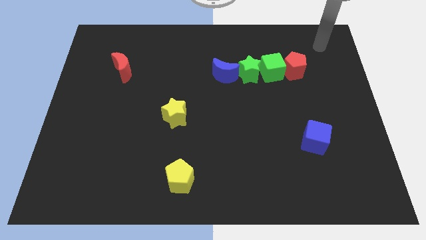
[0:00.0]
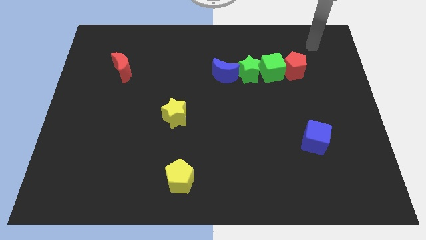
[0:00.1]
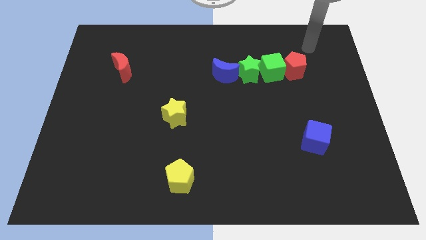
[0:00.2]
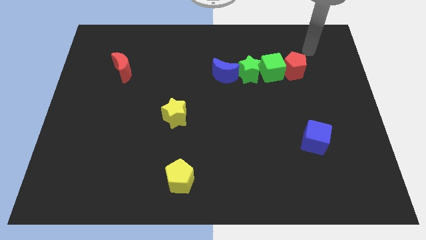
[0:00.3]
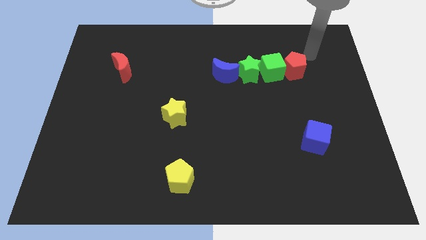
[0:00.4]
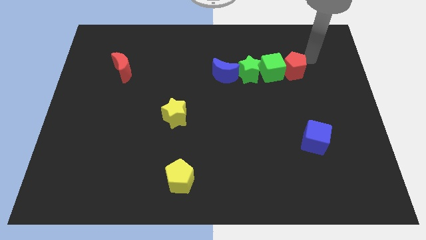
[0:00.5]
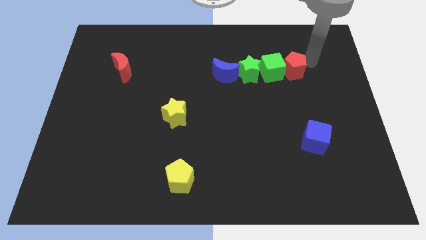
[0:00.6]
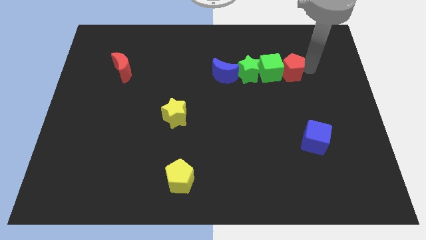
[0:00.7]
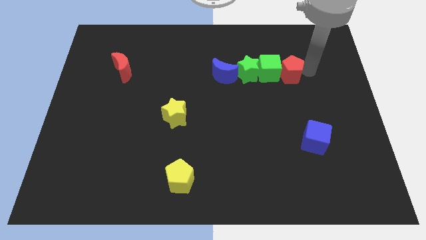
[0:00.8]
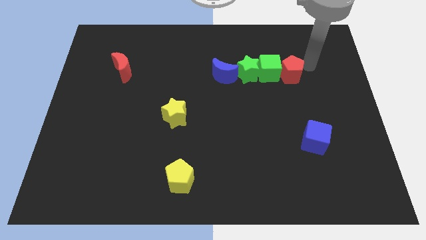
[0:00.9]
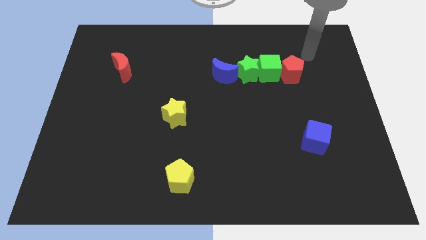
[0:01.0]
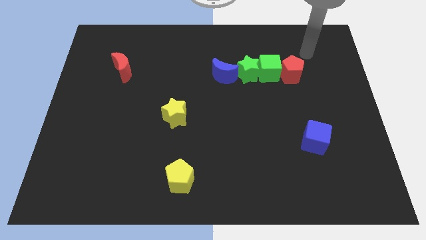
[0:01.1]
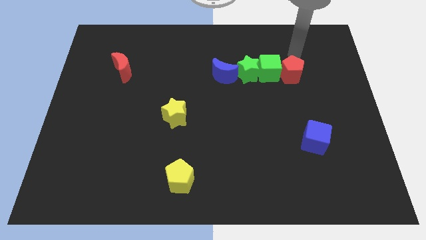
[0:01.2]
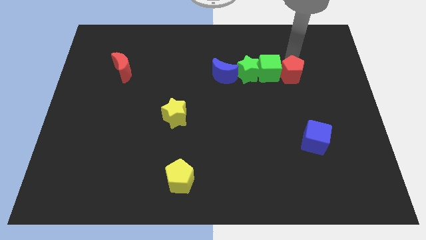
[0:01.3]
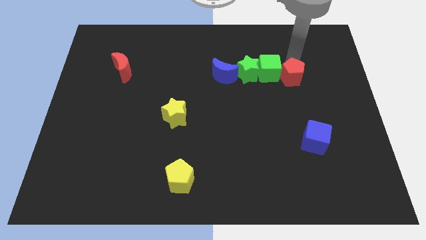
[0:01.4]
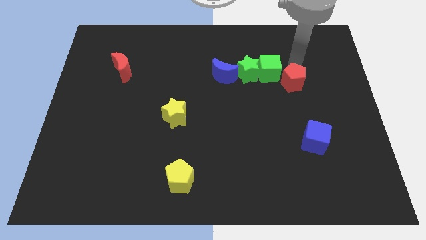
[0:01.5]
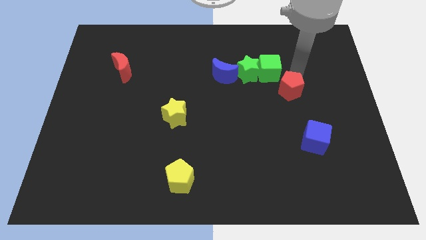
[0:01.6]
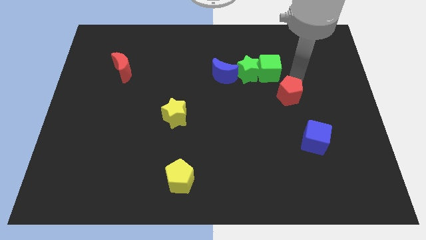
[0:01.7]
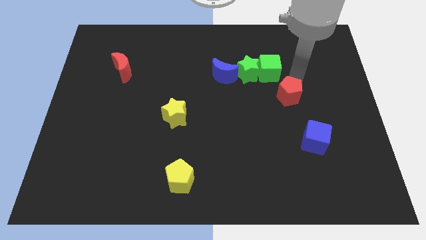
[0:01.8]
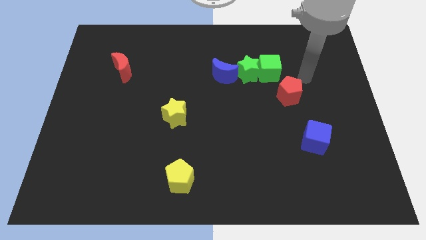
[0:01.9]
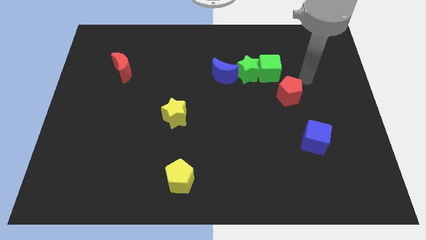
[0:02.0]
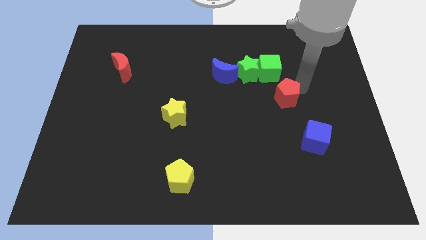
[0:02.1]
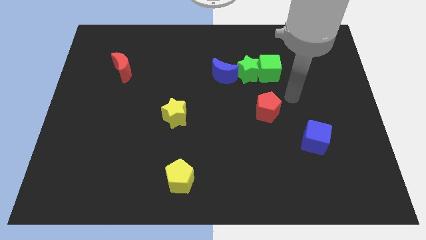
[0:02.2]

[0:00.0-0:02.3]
move the red pentagon below to the green cube

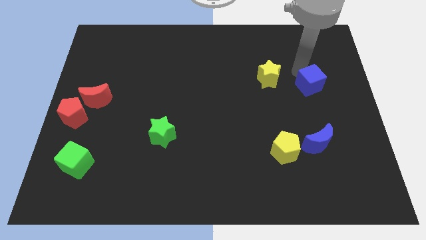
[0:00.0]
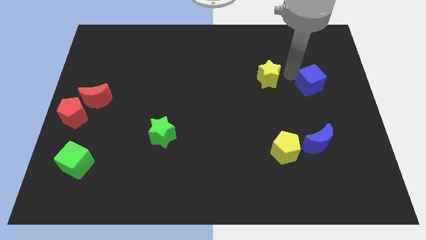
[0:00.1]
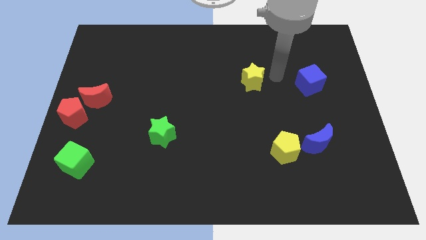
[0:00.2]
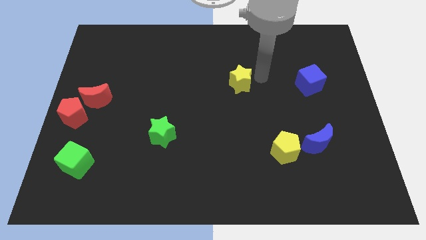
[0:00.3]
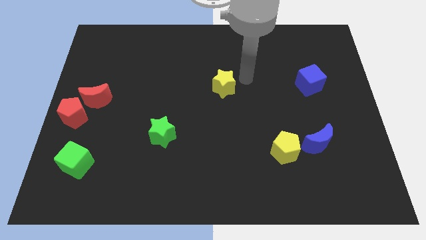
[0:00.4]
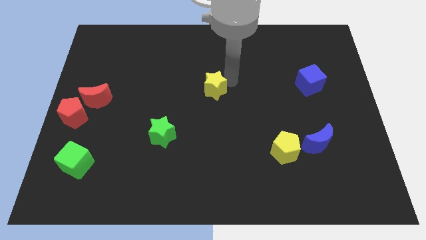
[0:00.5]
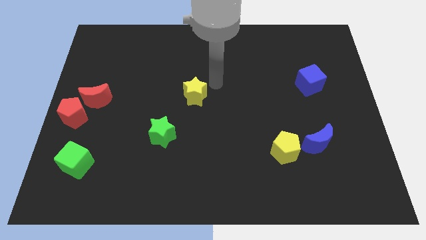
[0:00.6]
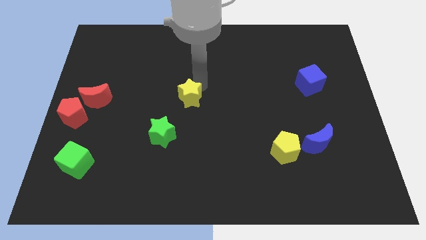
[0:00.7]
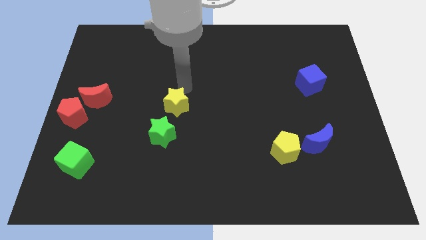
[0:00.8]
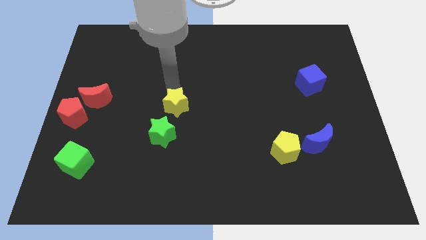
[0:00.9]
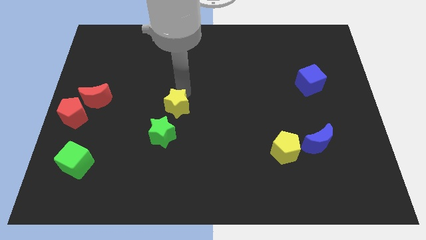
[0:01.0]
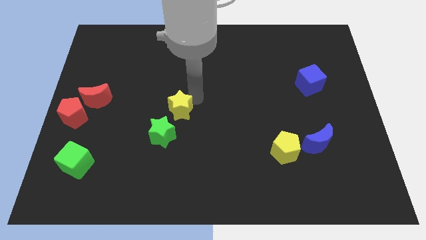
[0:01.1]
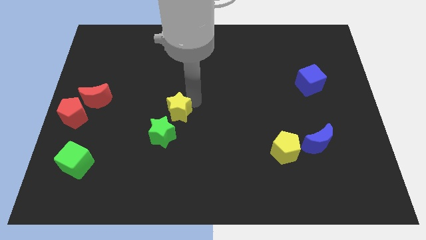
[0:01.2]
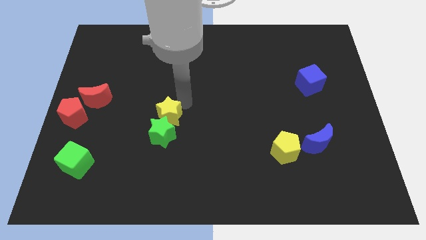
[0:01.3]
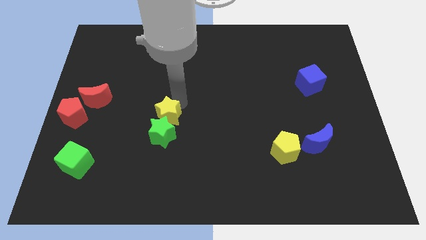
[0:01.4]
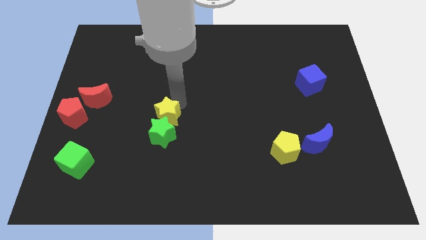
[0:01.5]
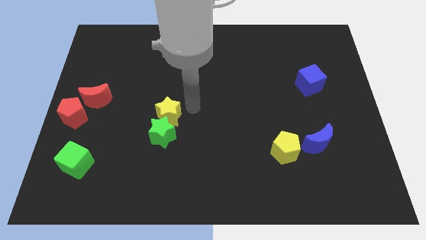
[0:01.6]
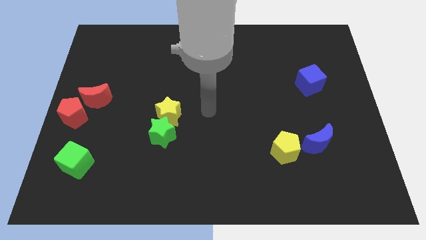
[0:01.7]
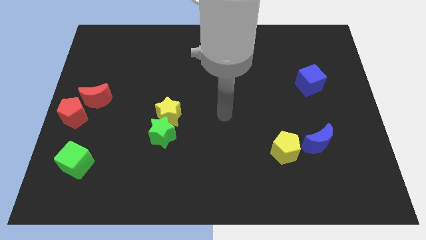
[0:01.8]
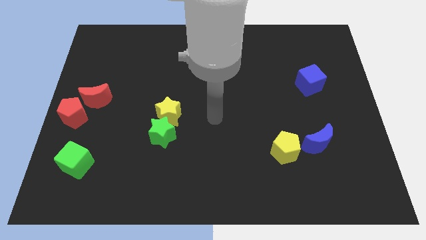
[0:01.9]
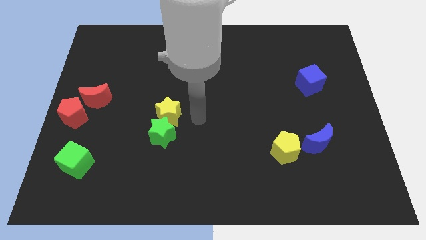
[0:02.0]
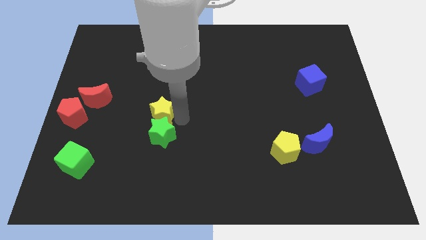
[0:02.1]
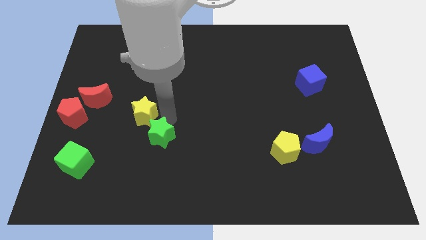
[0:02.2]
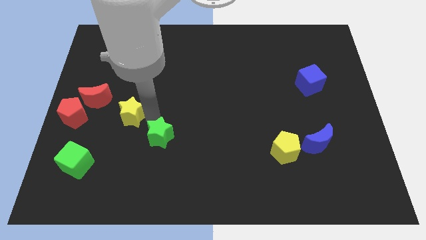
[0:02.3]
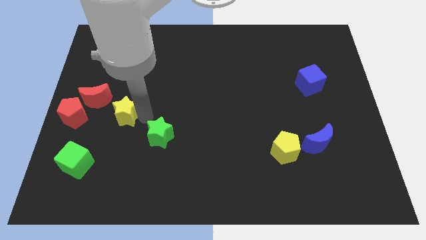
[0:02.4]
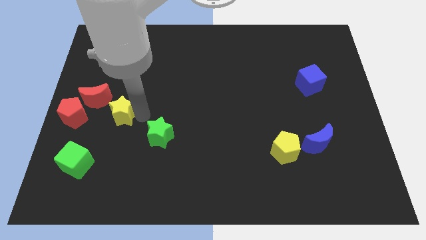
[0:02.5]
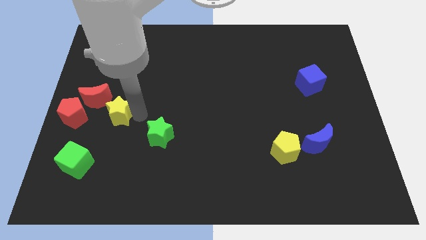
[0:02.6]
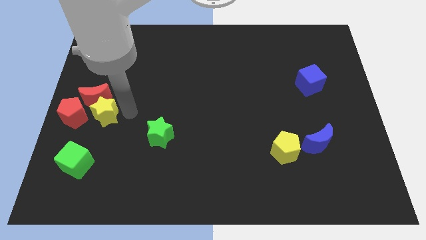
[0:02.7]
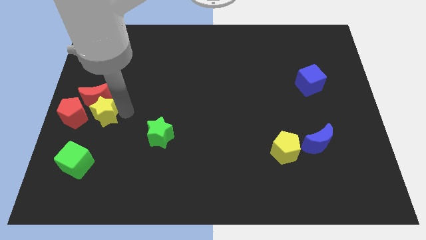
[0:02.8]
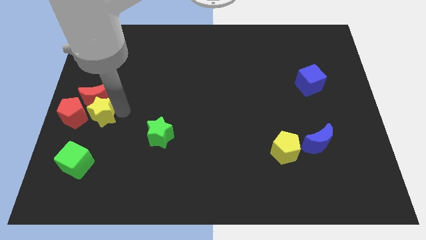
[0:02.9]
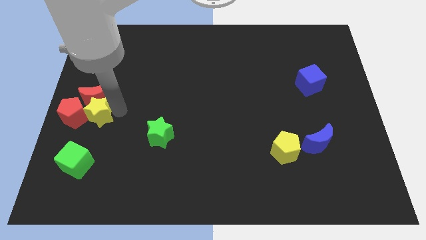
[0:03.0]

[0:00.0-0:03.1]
place the yellow star right to the red pentagon

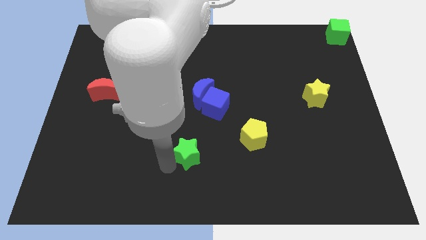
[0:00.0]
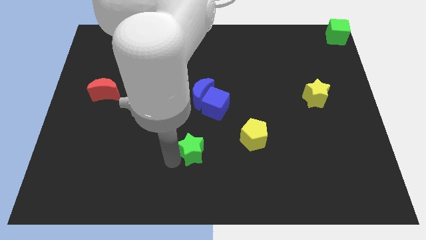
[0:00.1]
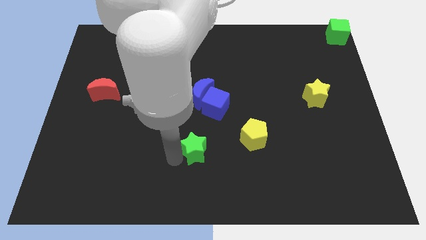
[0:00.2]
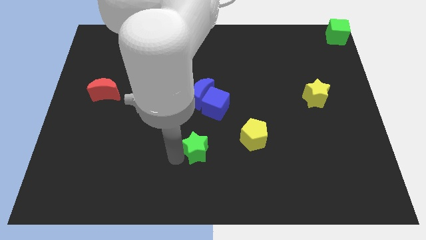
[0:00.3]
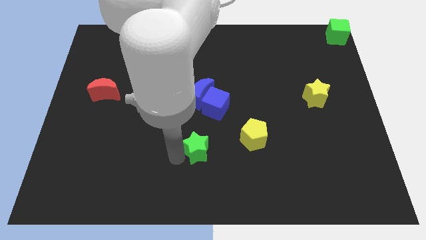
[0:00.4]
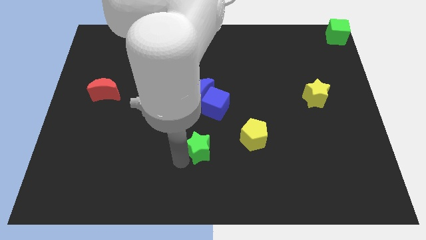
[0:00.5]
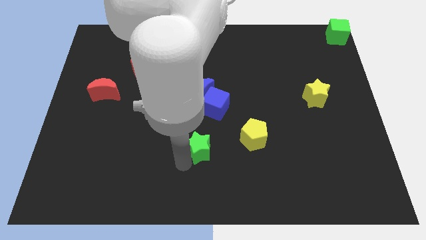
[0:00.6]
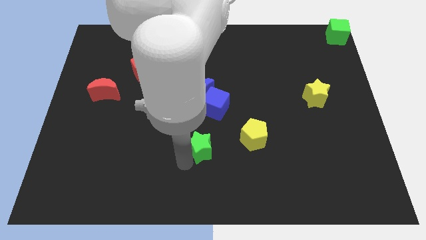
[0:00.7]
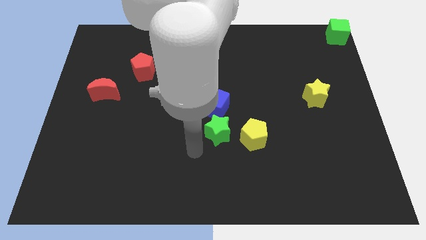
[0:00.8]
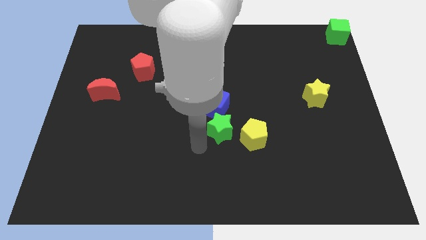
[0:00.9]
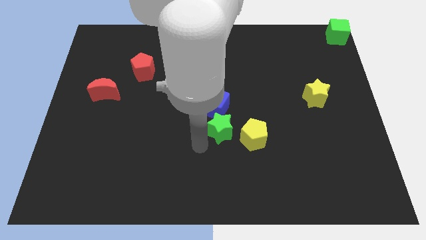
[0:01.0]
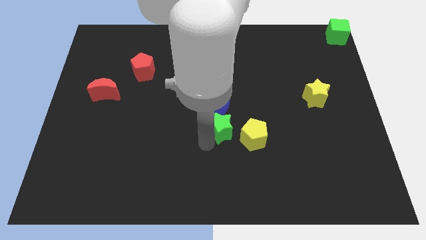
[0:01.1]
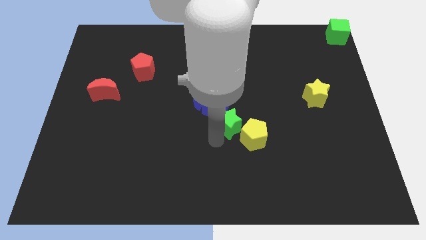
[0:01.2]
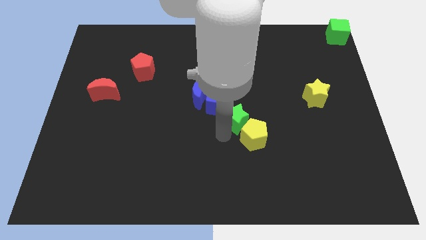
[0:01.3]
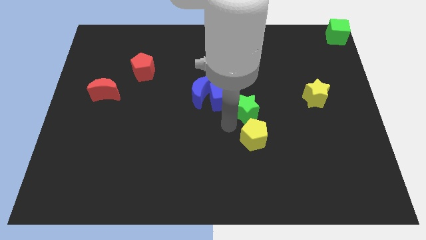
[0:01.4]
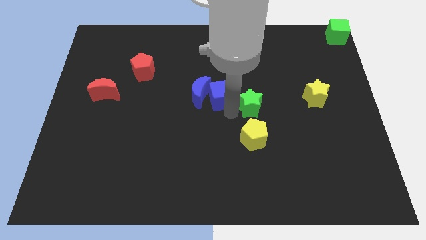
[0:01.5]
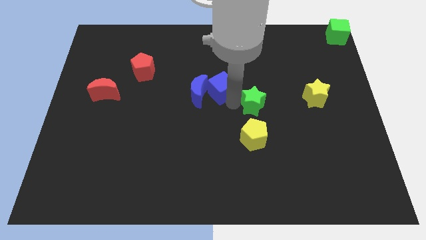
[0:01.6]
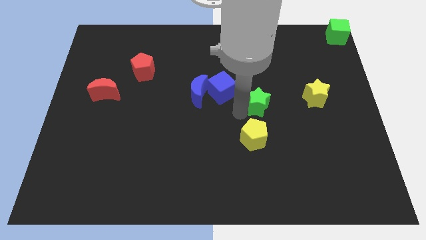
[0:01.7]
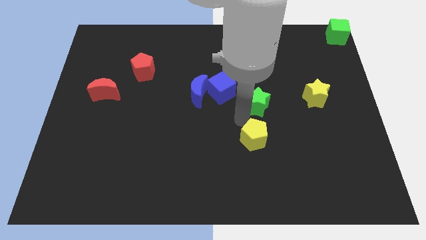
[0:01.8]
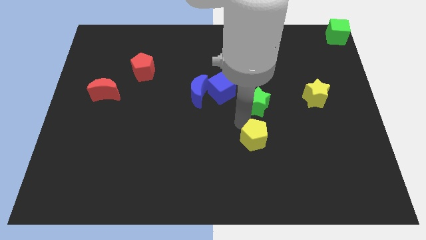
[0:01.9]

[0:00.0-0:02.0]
move the green star above the yellow pentagon

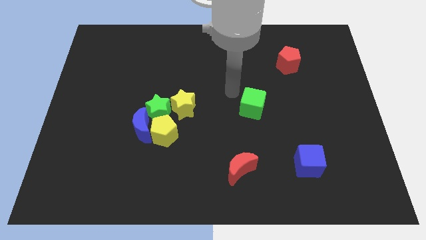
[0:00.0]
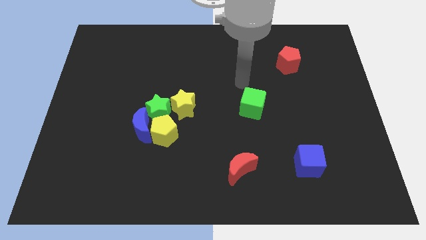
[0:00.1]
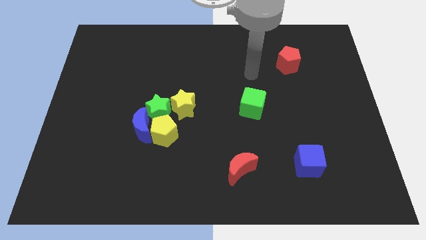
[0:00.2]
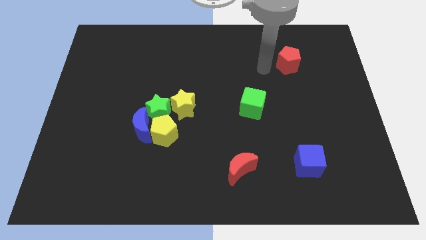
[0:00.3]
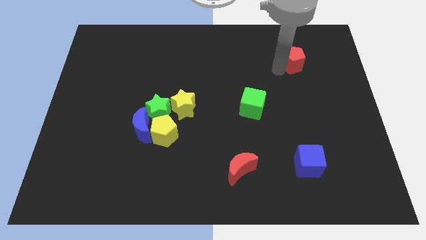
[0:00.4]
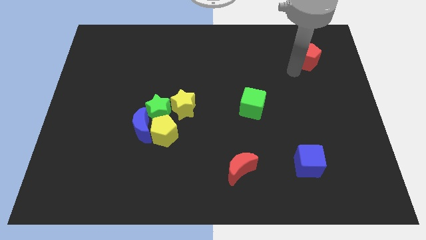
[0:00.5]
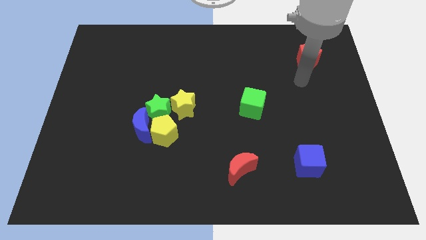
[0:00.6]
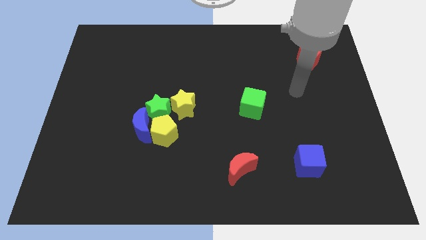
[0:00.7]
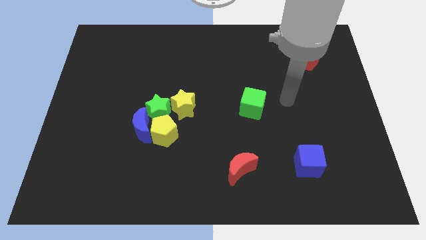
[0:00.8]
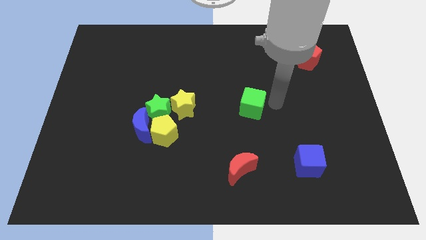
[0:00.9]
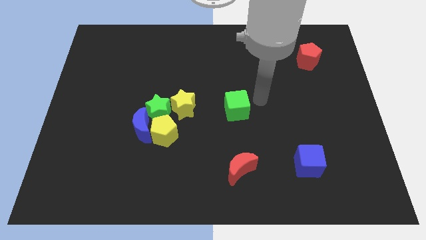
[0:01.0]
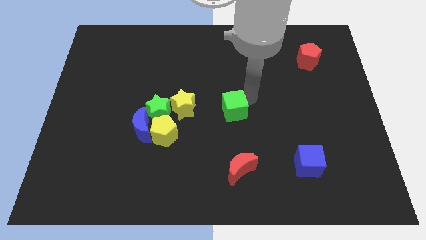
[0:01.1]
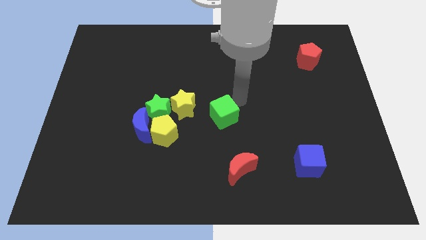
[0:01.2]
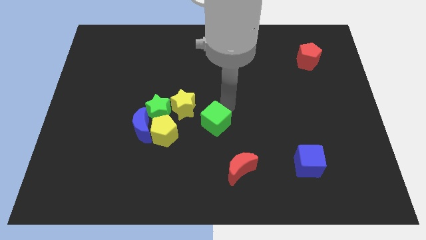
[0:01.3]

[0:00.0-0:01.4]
slide the green cube to the center of the board

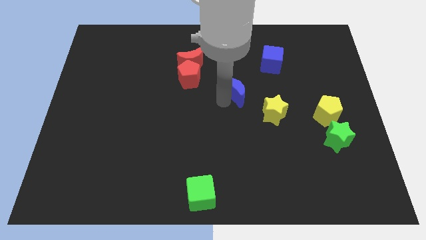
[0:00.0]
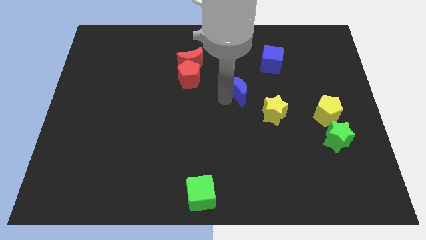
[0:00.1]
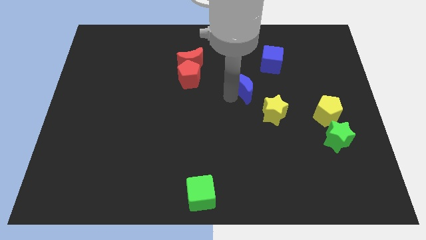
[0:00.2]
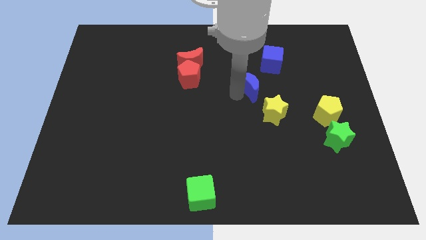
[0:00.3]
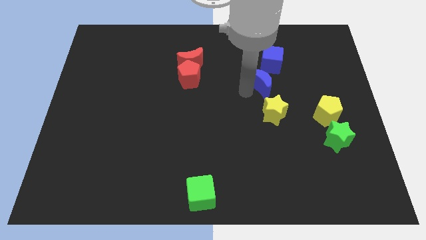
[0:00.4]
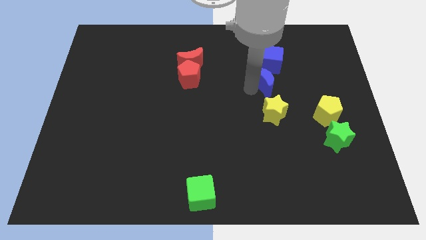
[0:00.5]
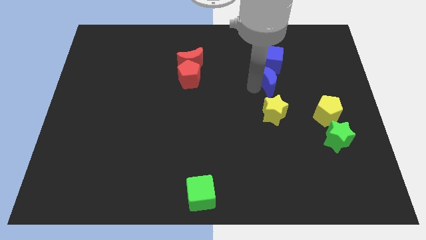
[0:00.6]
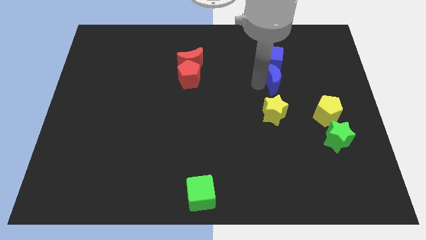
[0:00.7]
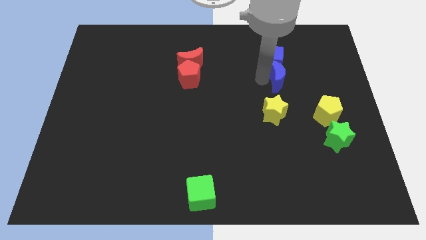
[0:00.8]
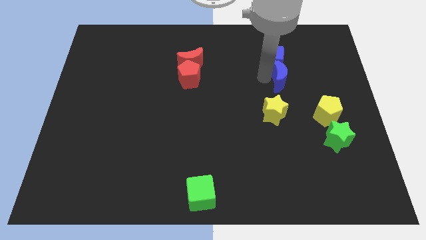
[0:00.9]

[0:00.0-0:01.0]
place the blue moon in between the blue cube and yellow star
